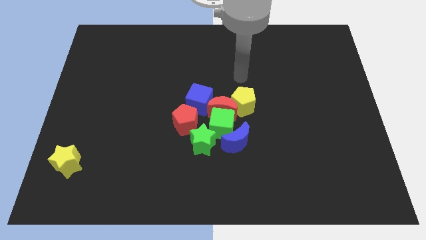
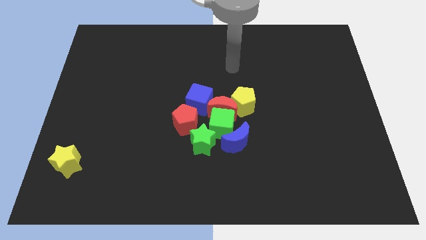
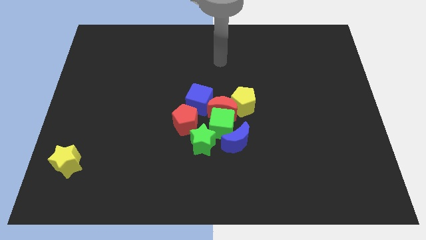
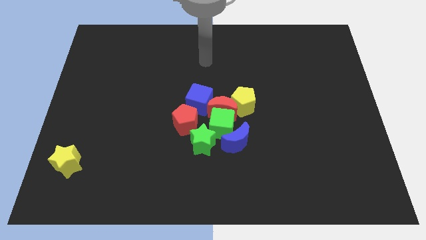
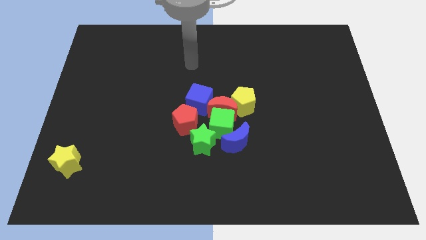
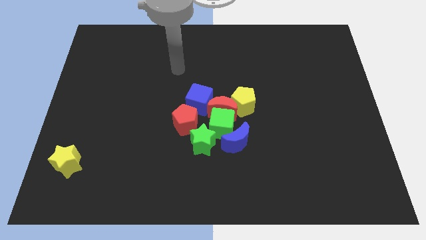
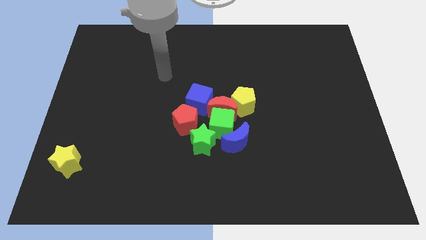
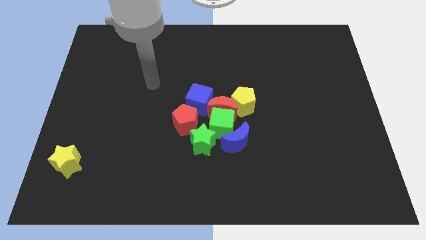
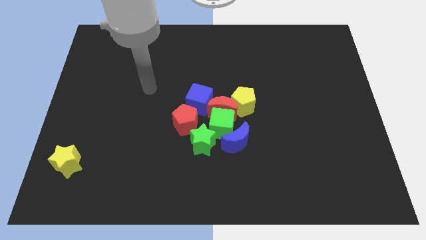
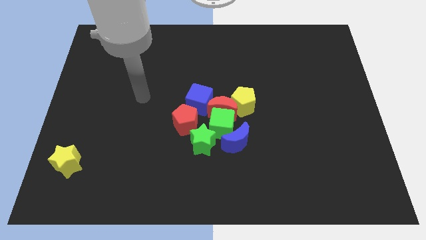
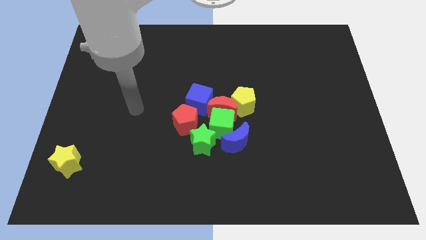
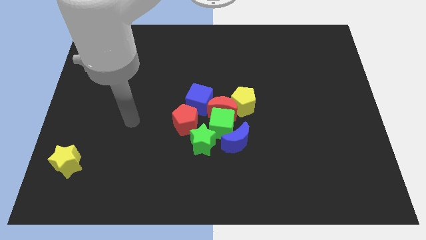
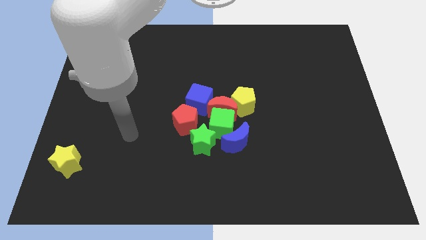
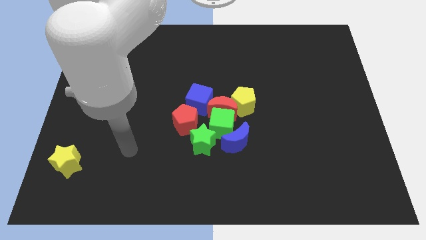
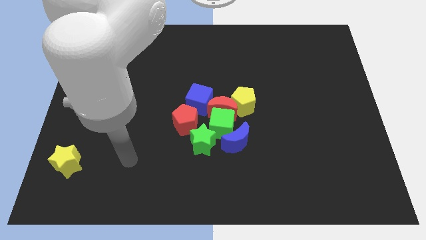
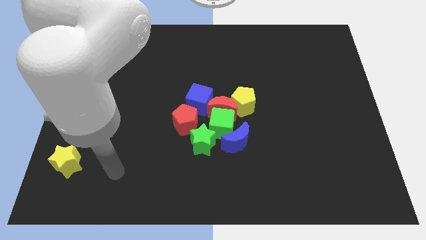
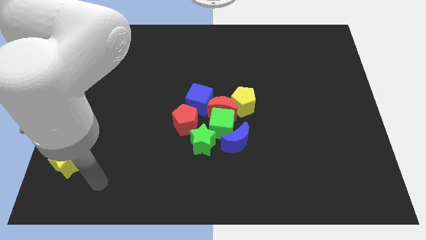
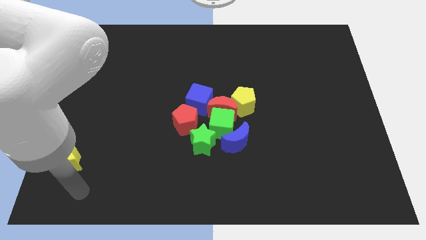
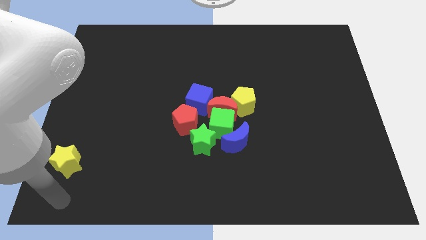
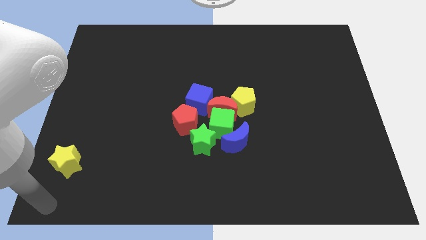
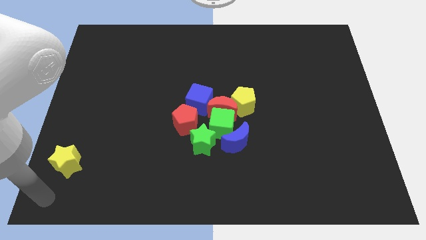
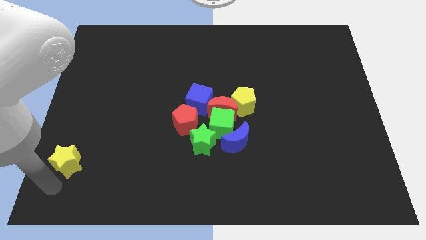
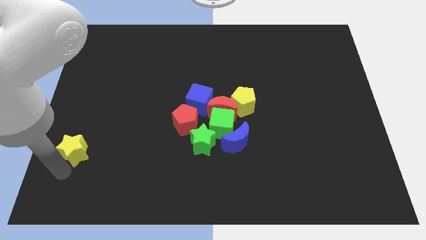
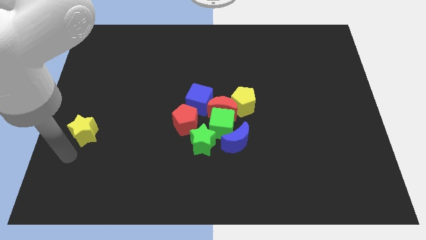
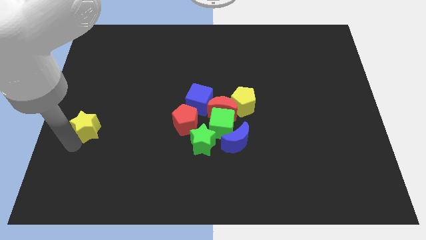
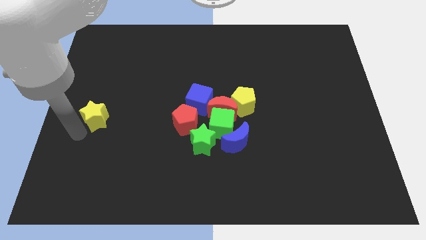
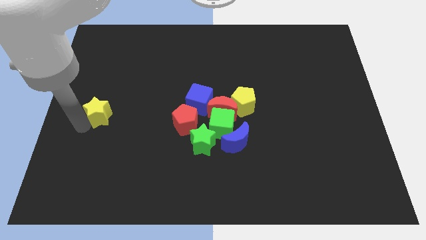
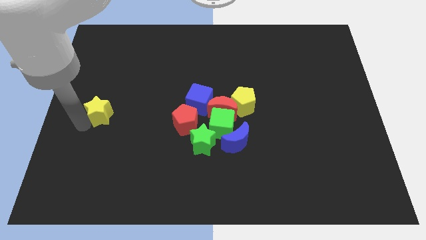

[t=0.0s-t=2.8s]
move the yellow star to the left of the red pentagon

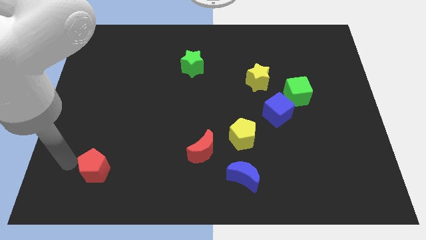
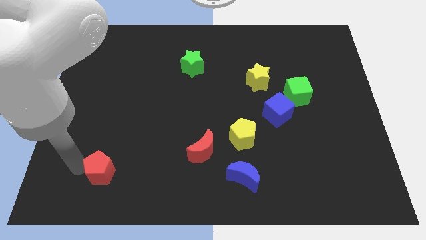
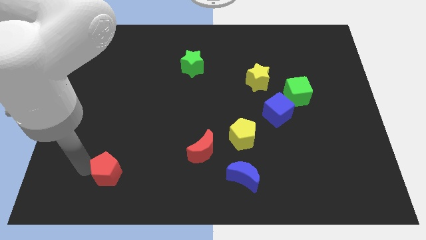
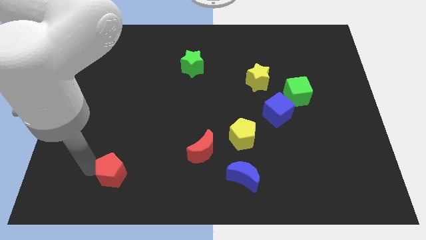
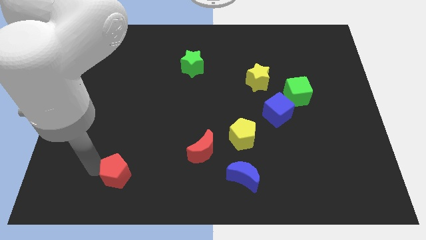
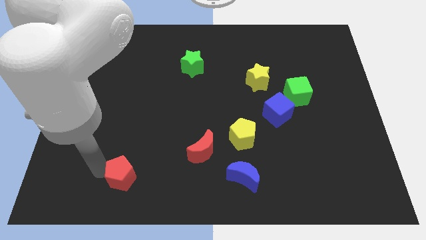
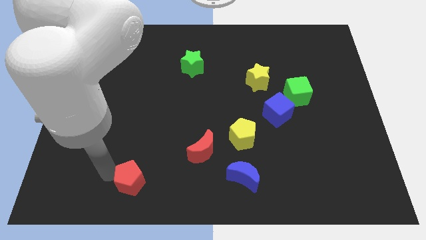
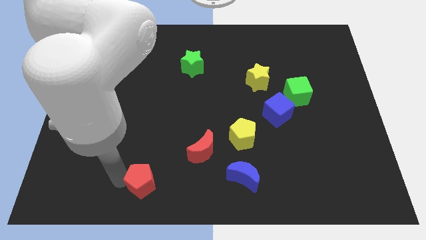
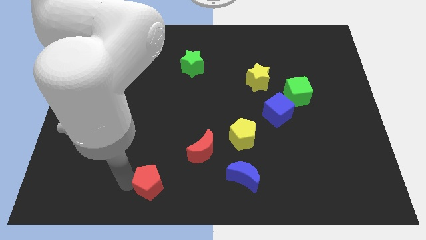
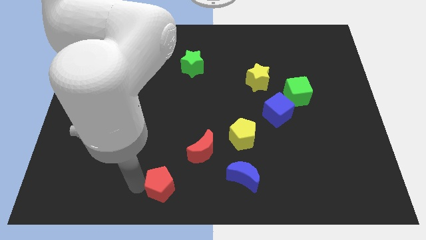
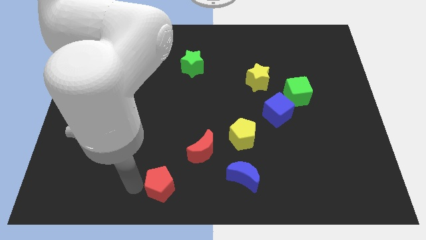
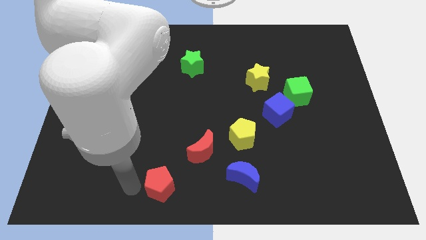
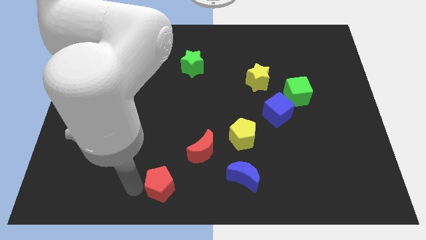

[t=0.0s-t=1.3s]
push red pentagon towards right bottom

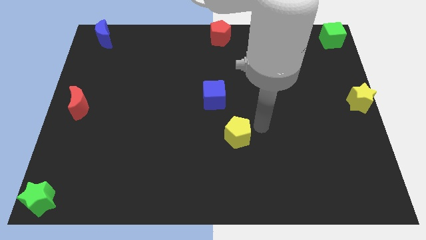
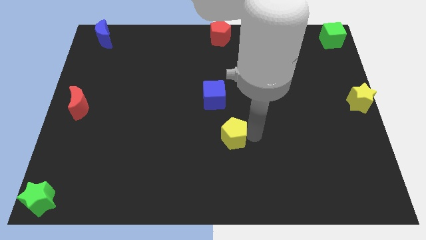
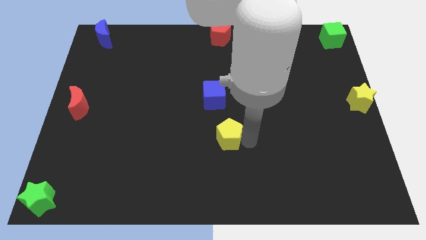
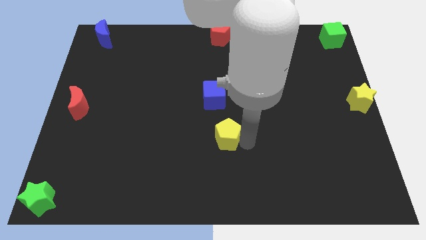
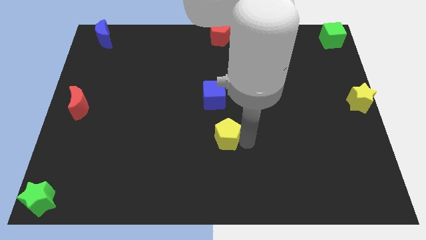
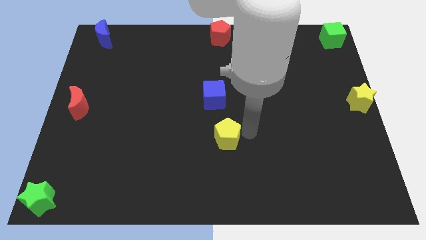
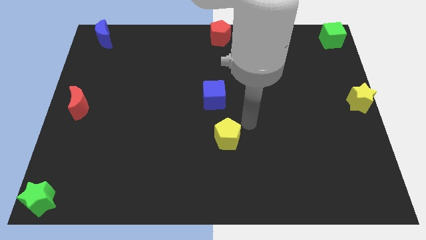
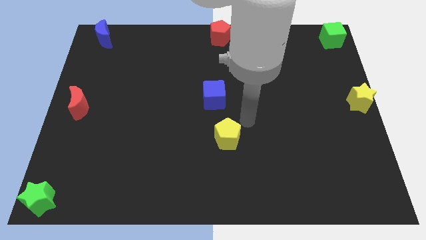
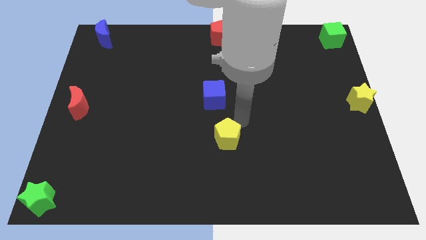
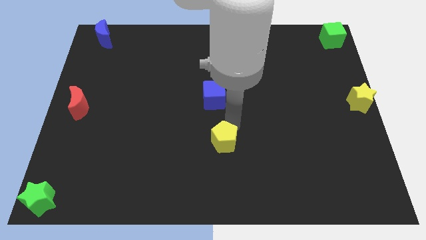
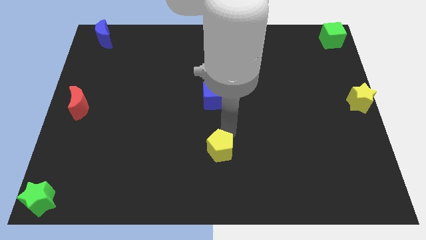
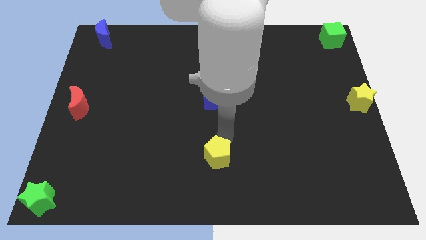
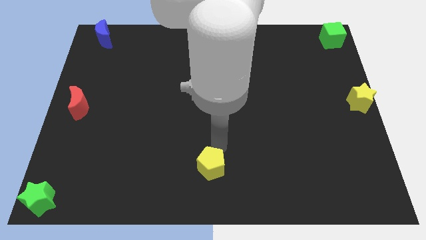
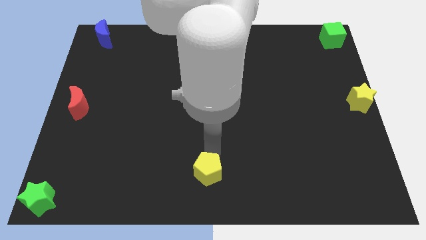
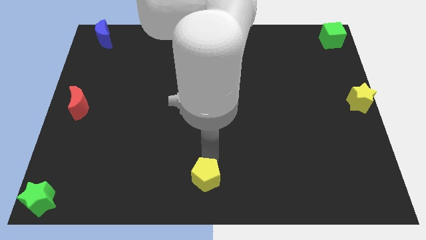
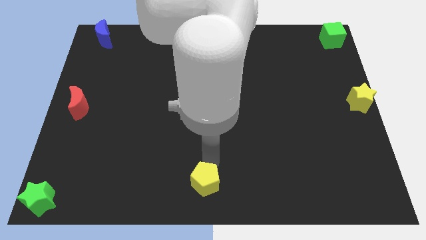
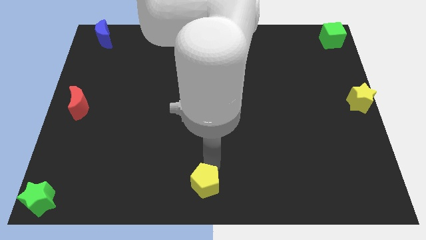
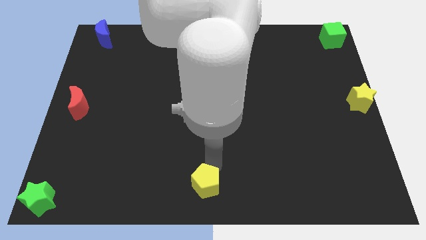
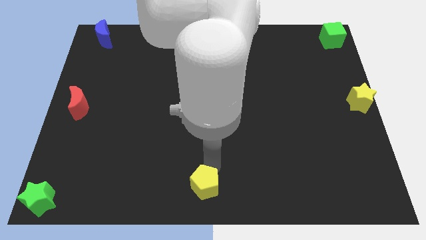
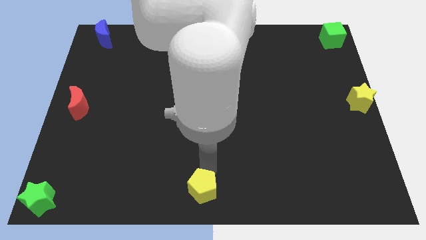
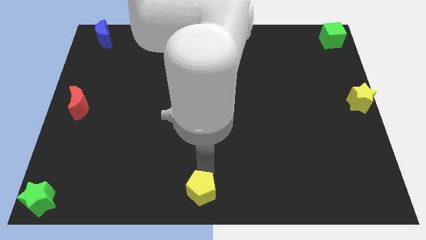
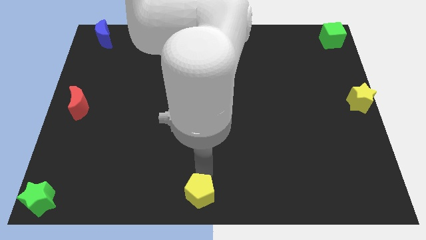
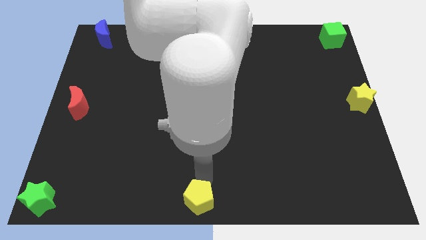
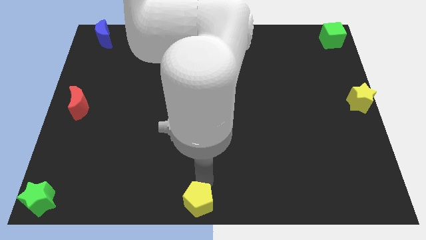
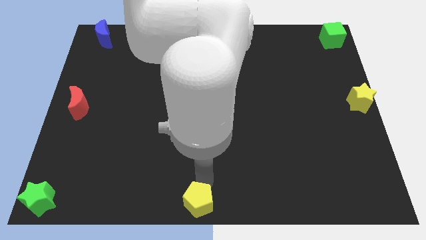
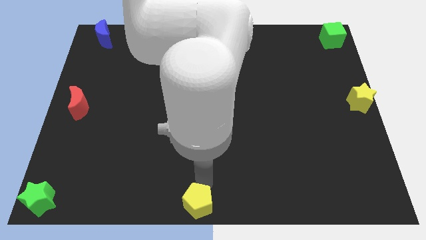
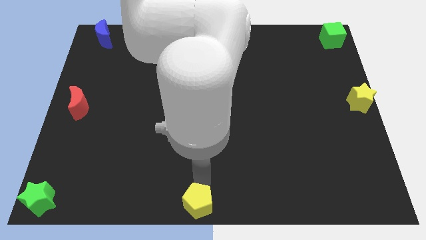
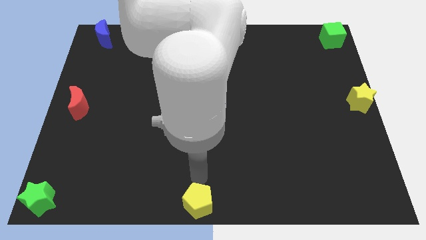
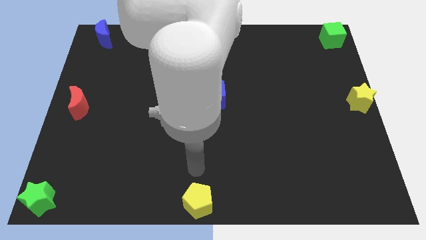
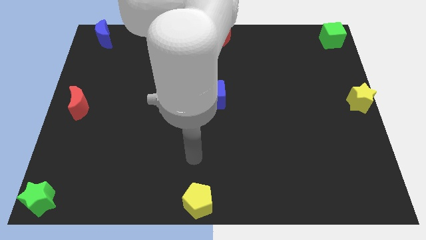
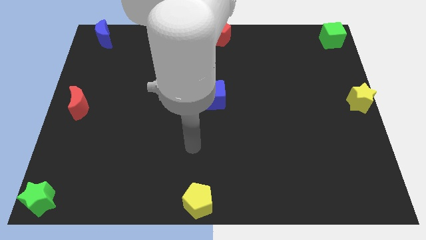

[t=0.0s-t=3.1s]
move the yellow pentagon to the bottom middle of the board

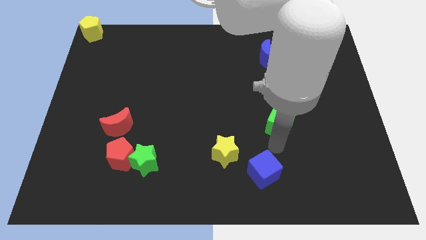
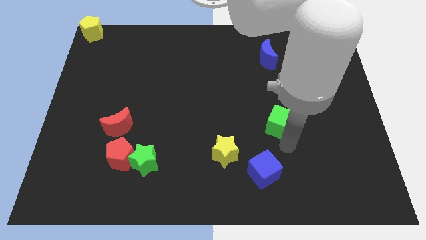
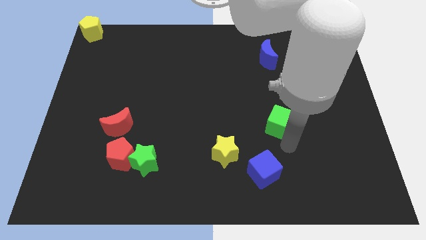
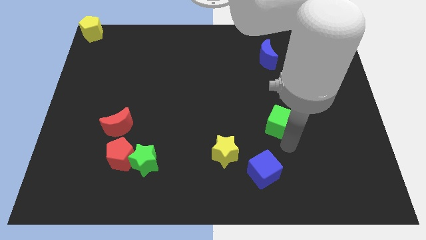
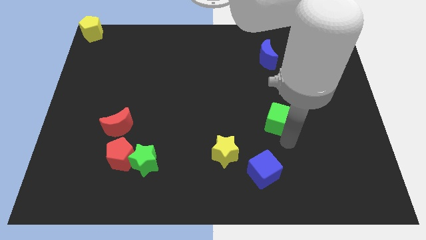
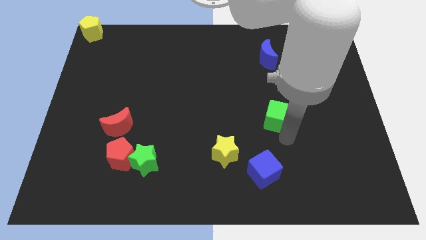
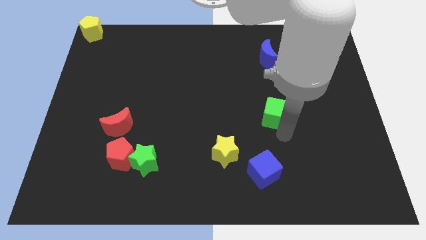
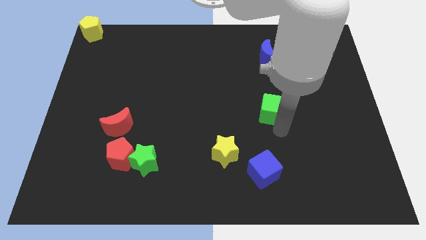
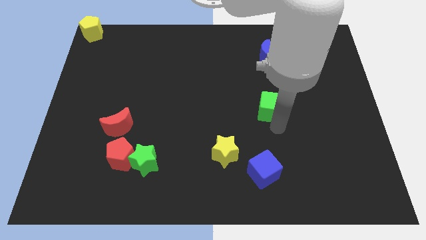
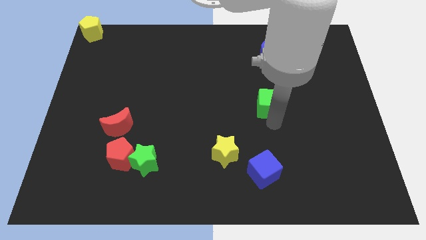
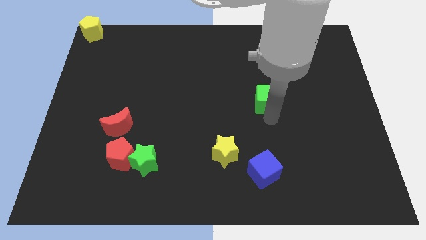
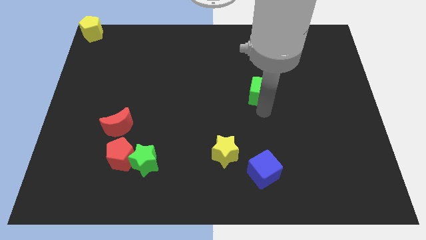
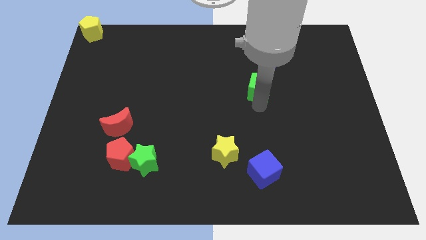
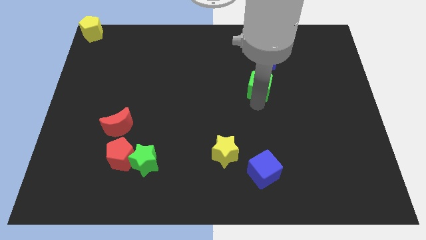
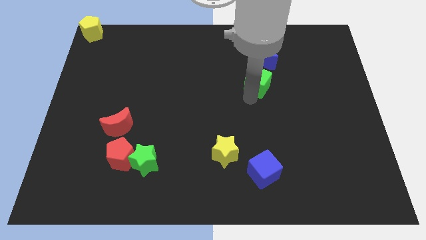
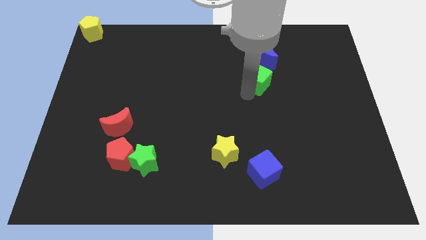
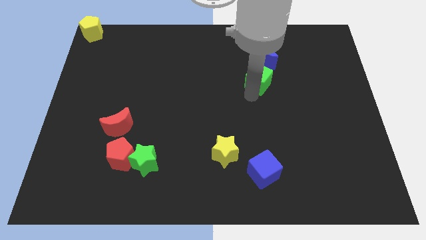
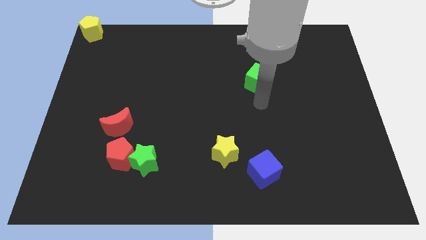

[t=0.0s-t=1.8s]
push the green cube towards the top center
